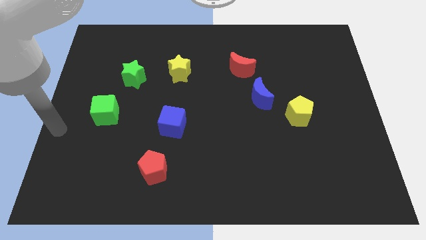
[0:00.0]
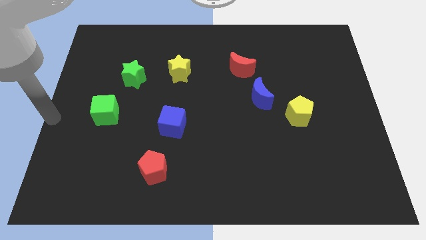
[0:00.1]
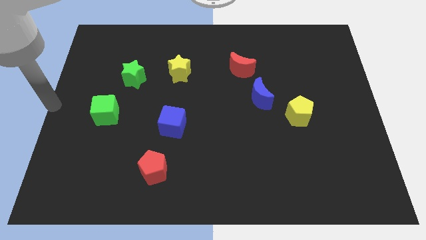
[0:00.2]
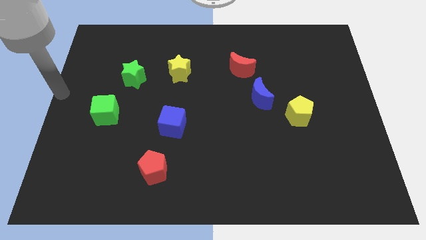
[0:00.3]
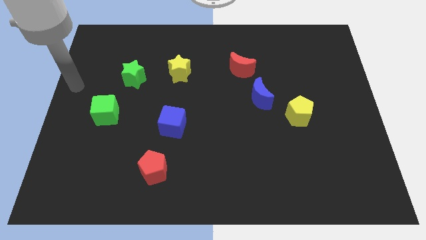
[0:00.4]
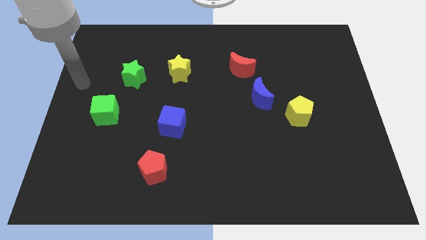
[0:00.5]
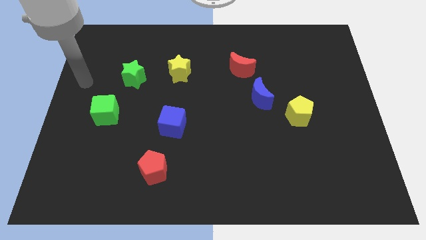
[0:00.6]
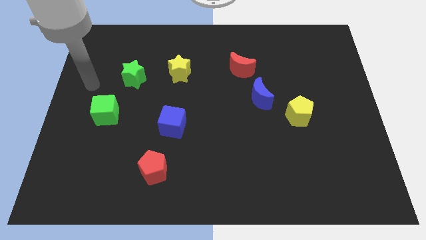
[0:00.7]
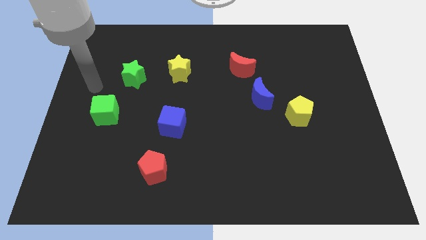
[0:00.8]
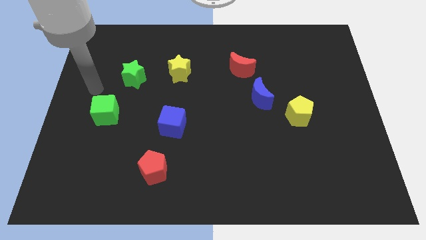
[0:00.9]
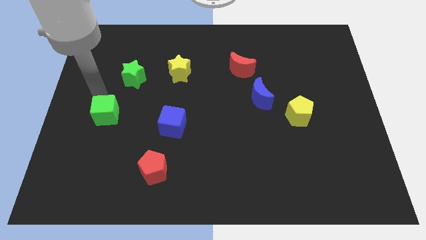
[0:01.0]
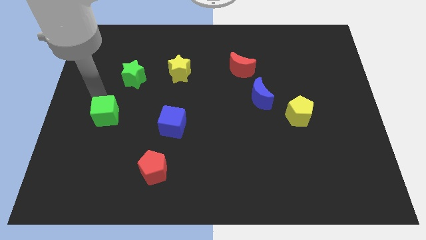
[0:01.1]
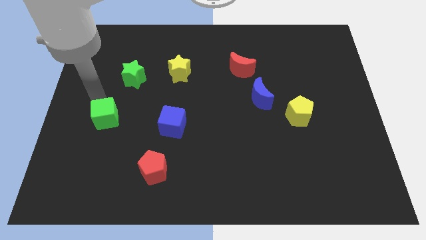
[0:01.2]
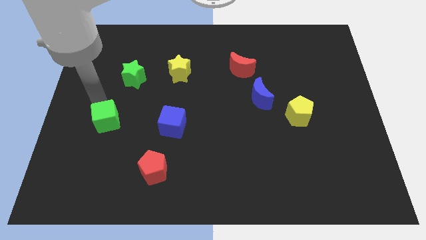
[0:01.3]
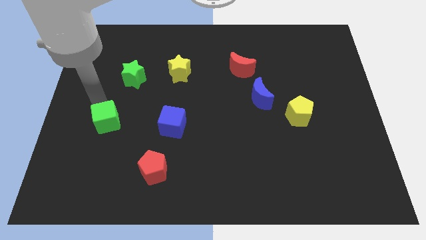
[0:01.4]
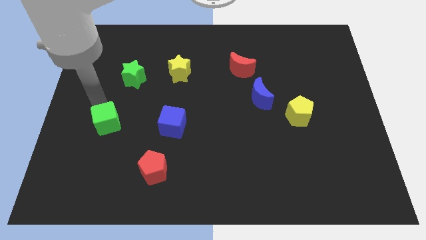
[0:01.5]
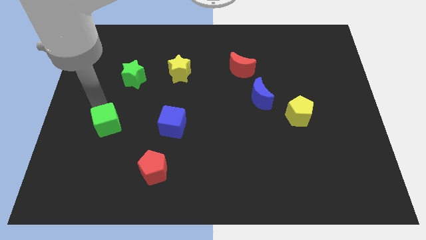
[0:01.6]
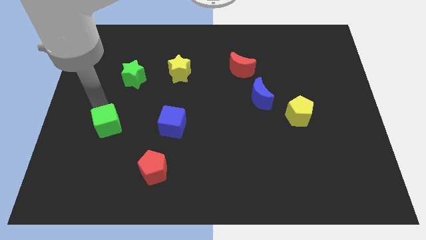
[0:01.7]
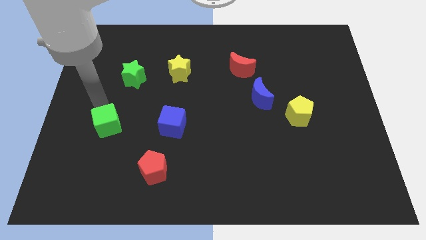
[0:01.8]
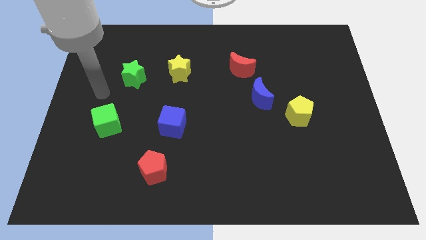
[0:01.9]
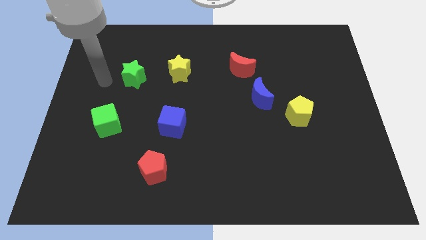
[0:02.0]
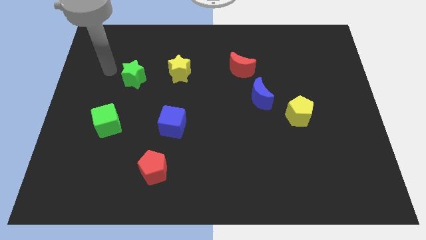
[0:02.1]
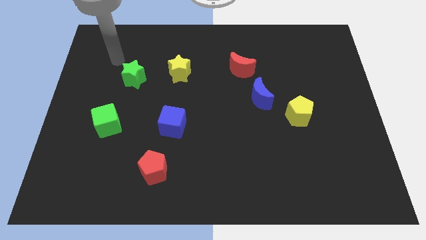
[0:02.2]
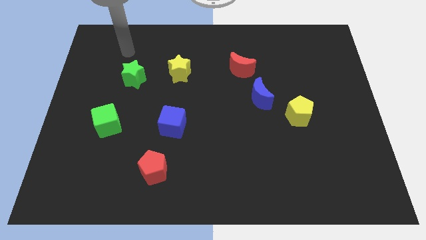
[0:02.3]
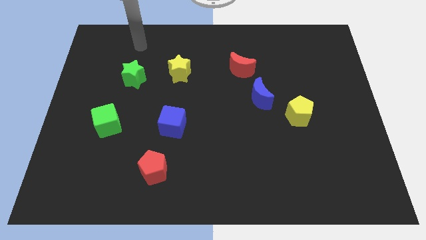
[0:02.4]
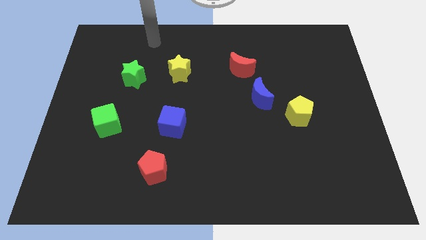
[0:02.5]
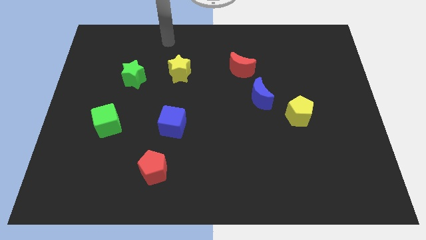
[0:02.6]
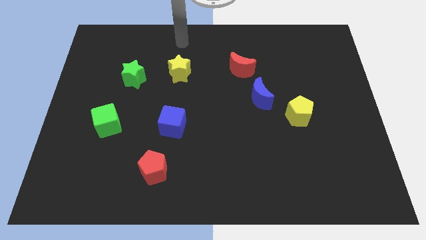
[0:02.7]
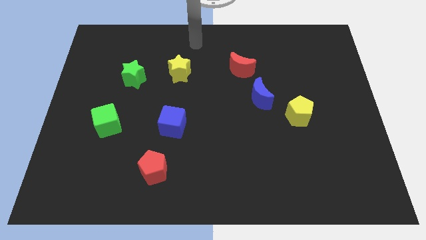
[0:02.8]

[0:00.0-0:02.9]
move your arm to the top center

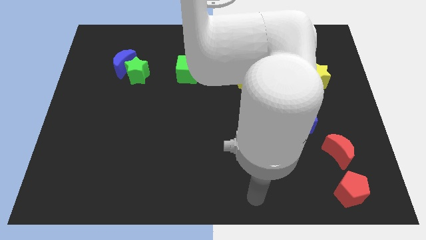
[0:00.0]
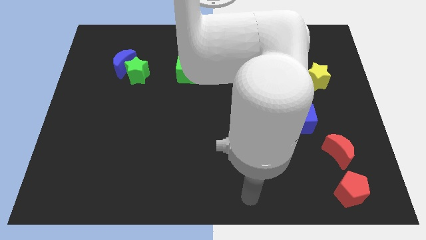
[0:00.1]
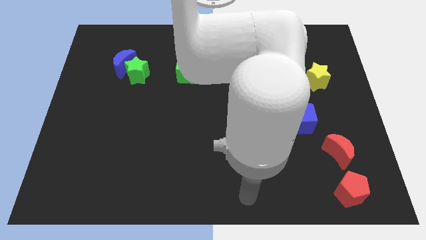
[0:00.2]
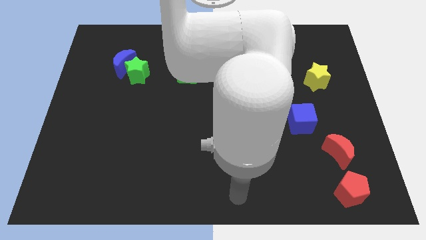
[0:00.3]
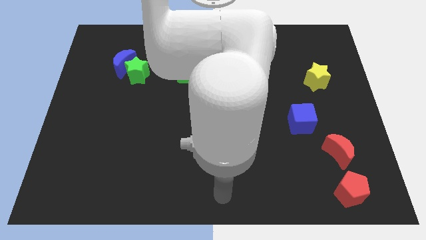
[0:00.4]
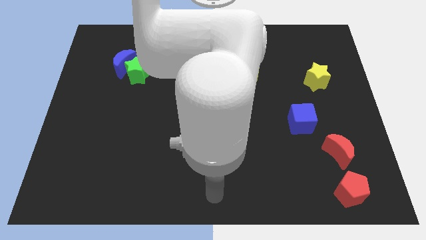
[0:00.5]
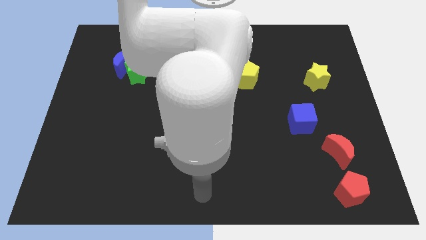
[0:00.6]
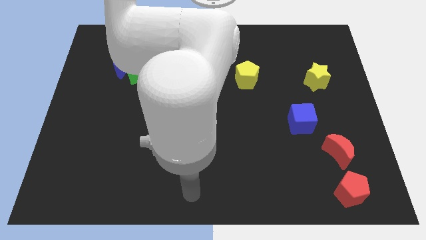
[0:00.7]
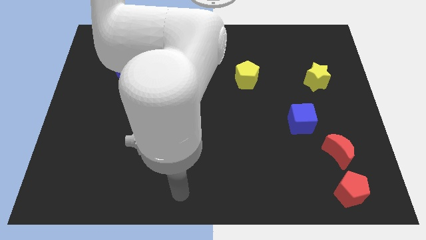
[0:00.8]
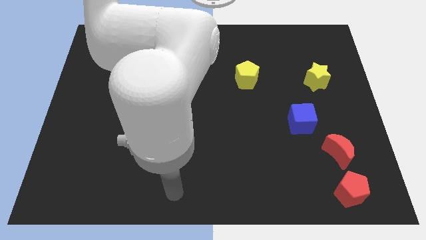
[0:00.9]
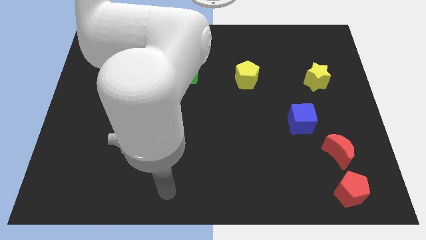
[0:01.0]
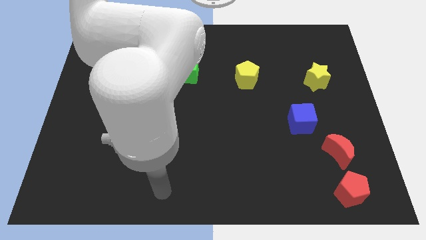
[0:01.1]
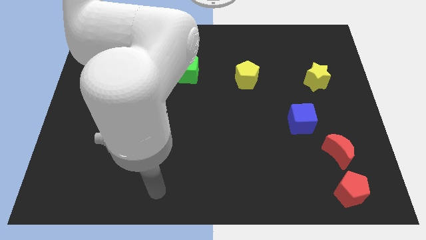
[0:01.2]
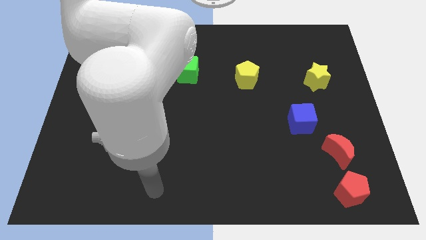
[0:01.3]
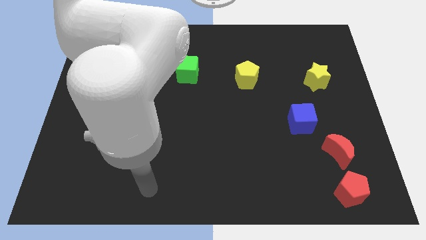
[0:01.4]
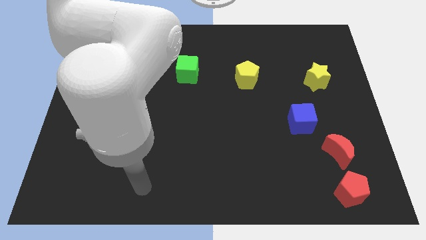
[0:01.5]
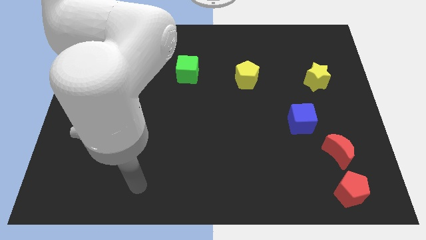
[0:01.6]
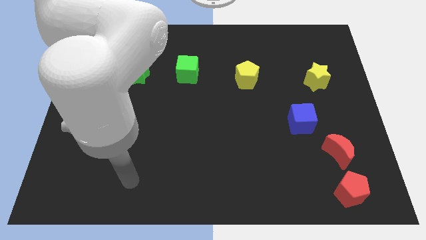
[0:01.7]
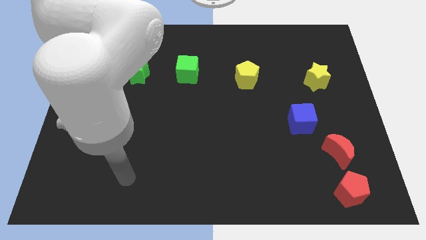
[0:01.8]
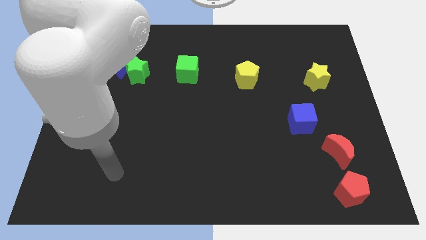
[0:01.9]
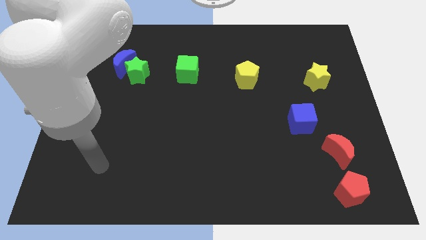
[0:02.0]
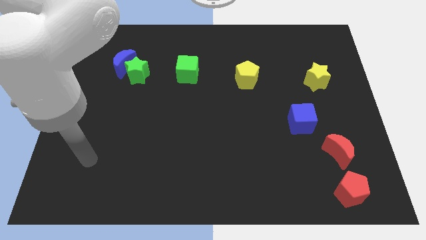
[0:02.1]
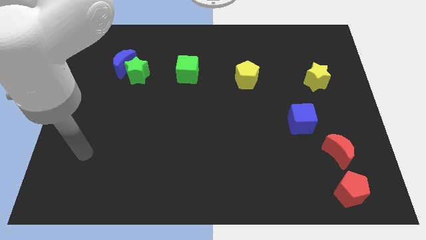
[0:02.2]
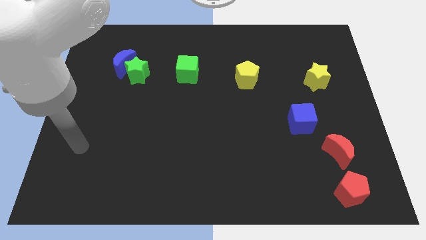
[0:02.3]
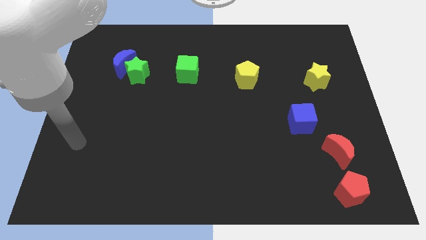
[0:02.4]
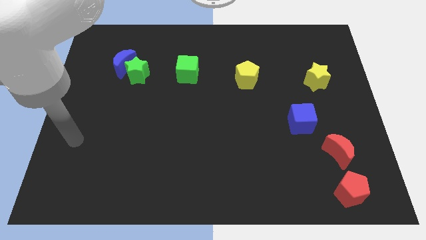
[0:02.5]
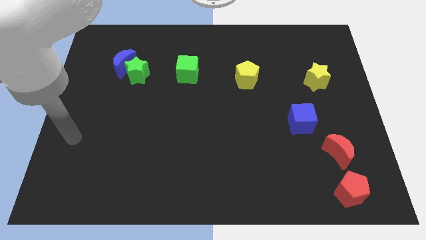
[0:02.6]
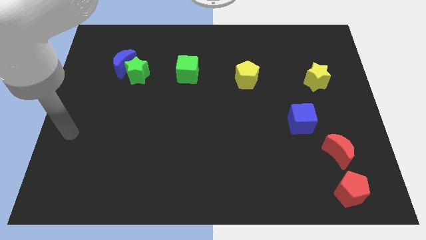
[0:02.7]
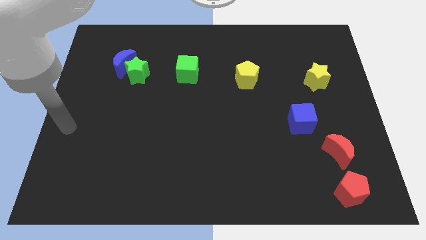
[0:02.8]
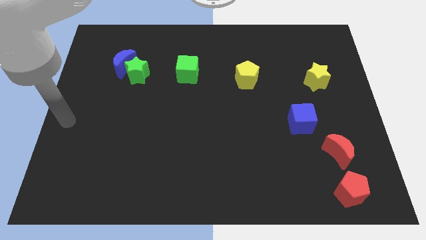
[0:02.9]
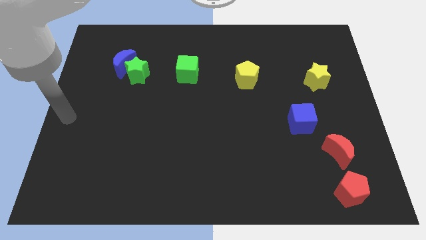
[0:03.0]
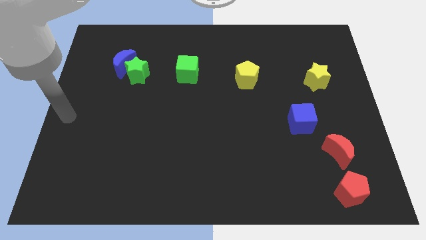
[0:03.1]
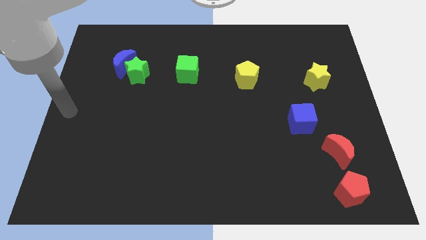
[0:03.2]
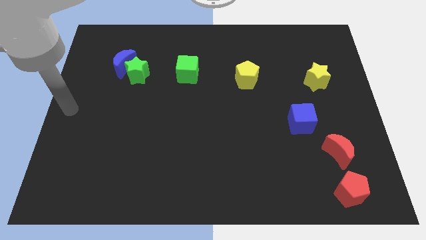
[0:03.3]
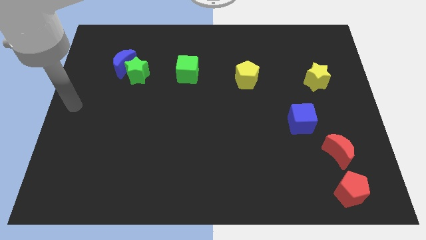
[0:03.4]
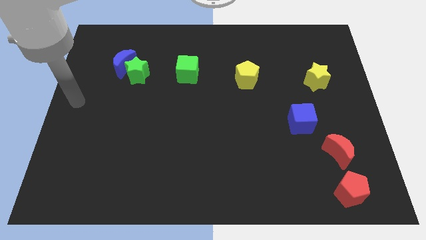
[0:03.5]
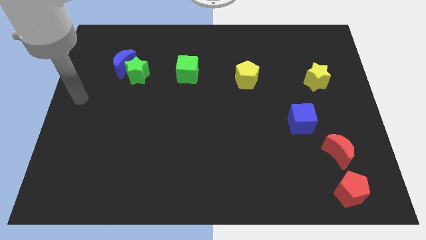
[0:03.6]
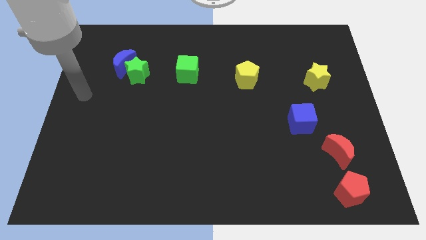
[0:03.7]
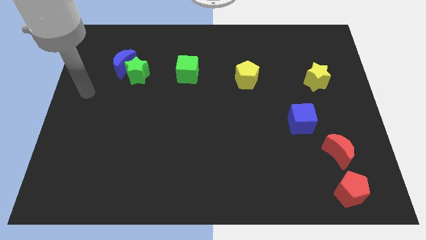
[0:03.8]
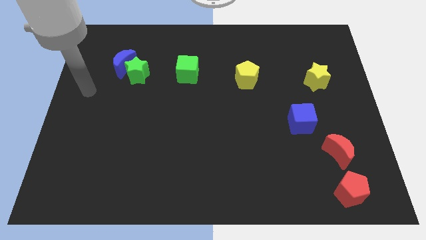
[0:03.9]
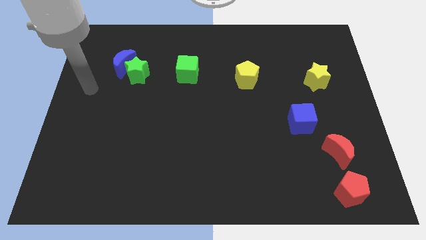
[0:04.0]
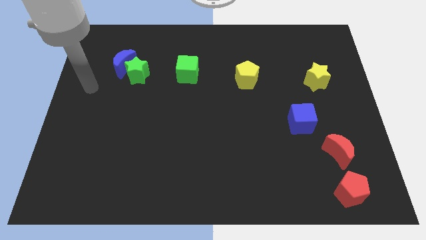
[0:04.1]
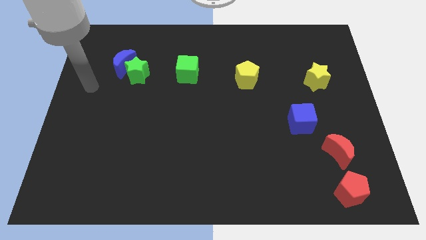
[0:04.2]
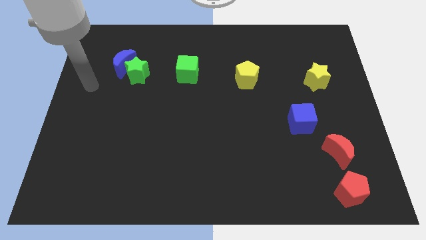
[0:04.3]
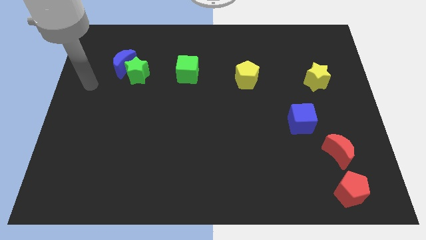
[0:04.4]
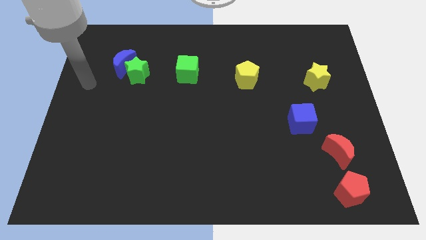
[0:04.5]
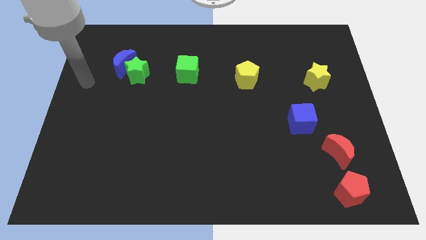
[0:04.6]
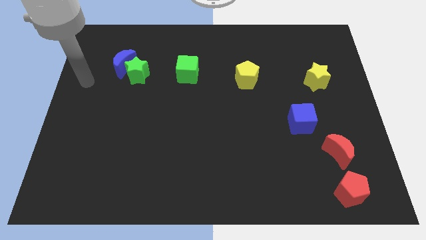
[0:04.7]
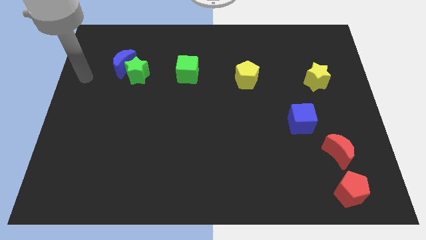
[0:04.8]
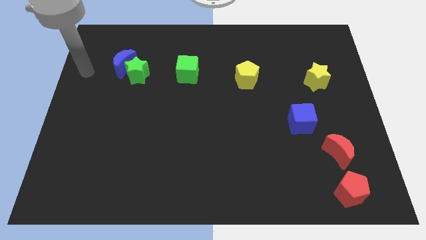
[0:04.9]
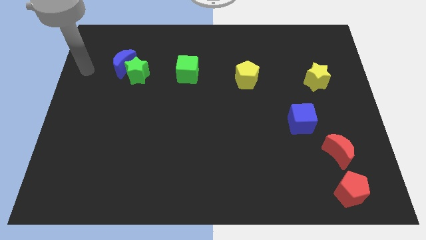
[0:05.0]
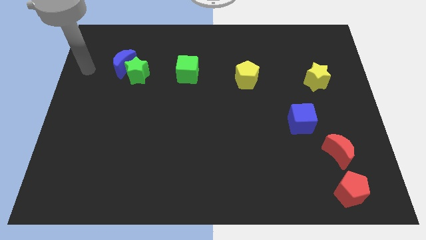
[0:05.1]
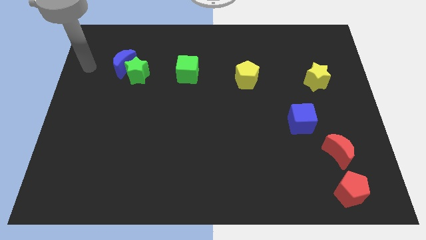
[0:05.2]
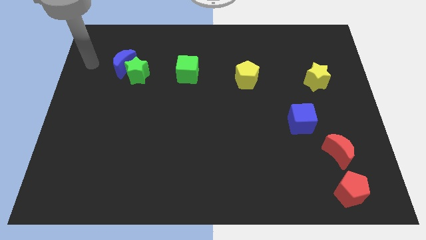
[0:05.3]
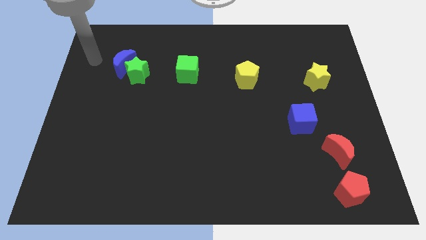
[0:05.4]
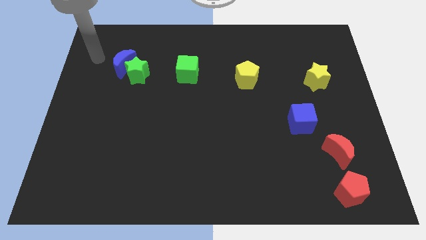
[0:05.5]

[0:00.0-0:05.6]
move your hand towards the top left

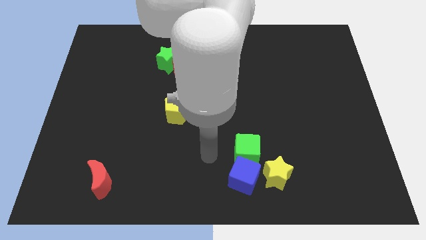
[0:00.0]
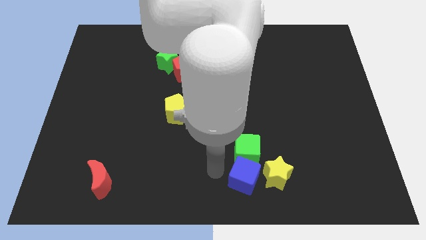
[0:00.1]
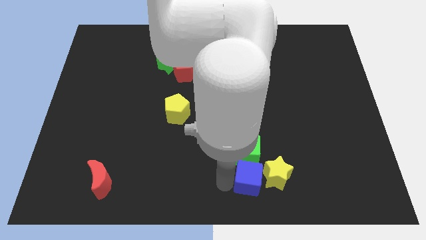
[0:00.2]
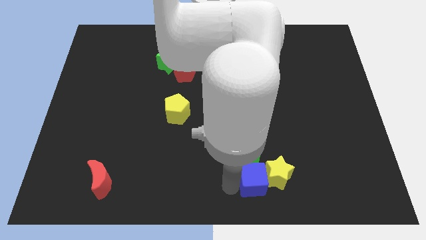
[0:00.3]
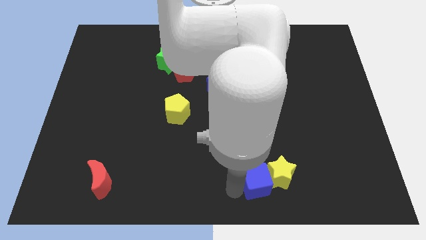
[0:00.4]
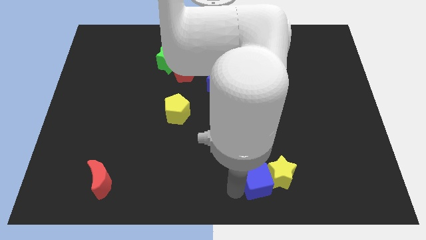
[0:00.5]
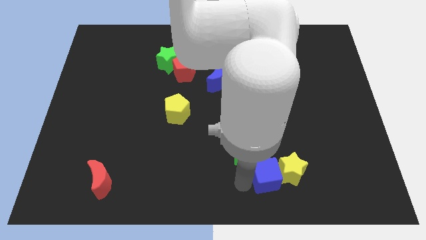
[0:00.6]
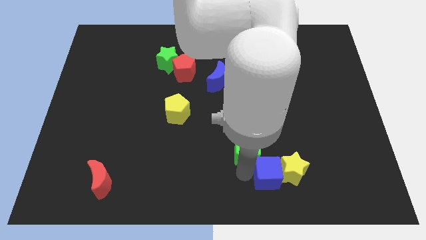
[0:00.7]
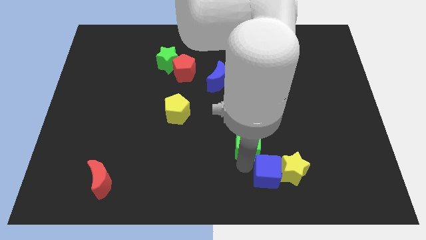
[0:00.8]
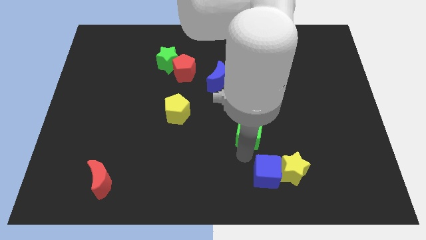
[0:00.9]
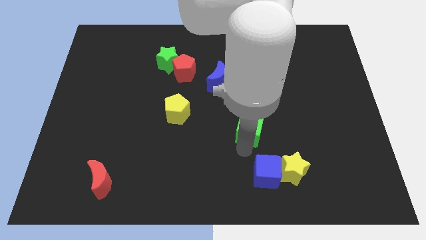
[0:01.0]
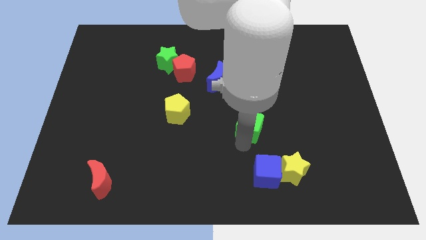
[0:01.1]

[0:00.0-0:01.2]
separate the green cube and blue cube
